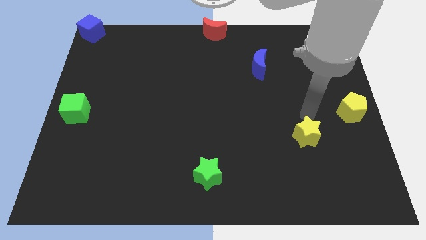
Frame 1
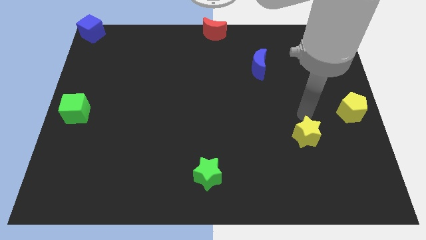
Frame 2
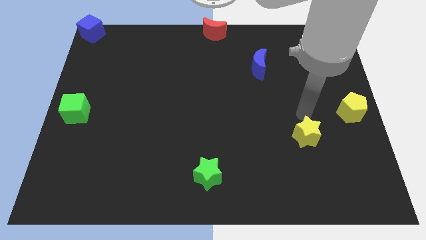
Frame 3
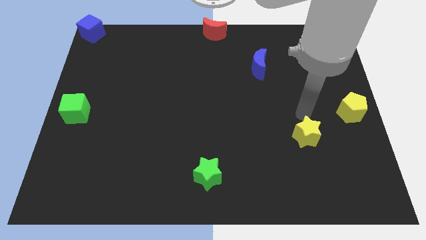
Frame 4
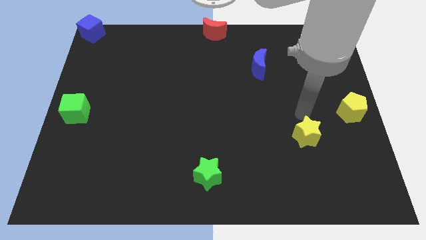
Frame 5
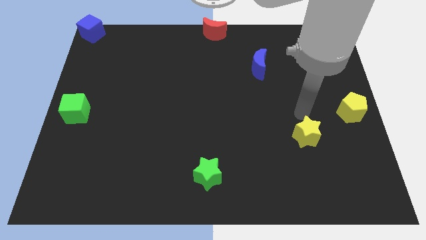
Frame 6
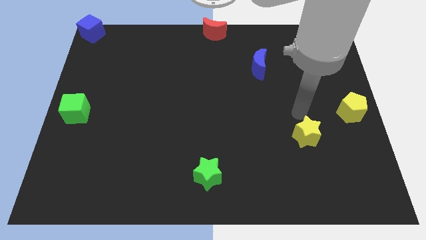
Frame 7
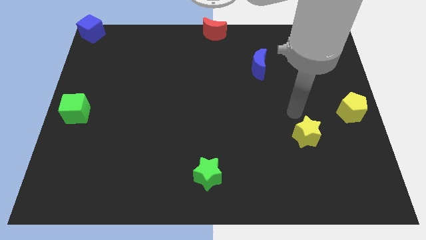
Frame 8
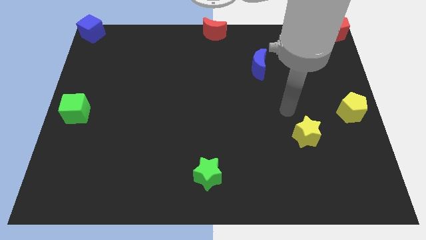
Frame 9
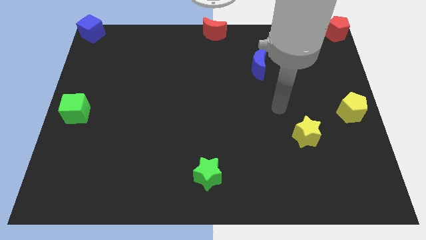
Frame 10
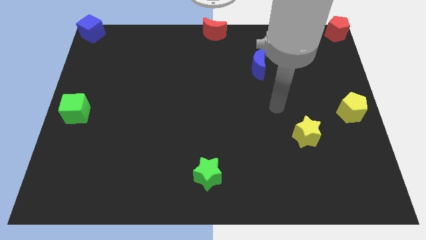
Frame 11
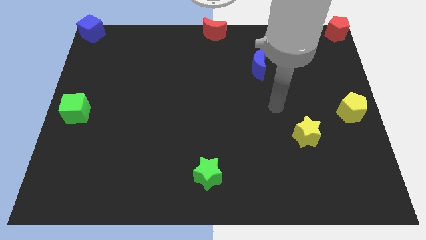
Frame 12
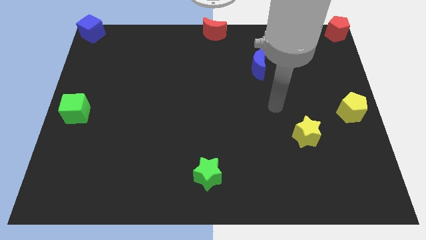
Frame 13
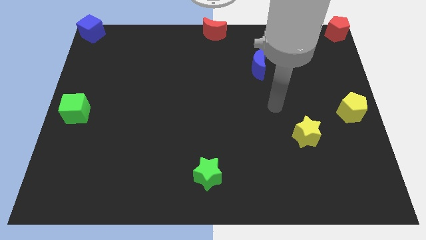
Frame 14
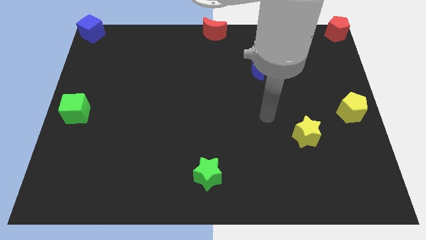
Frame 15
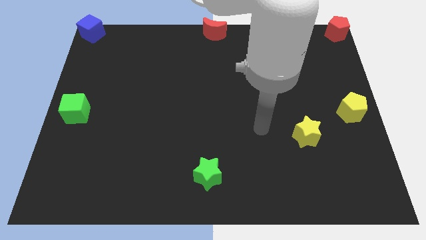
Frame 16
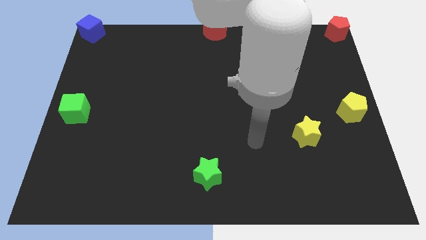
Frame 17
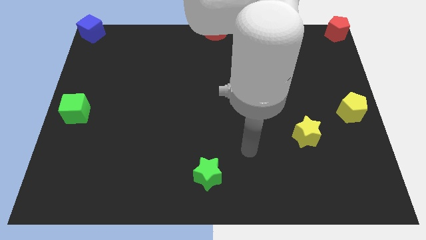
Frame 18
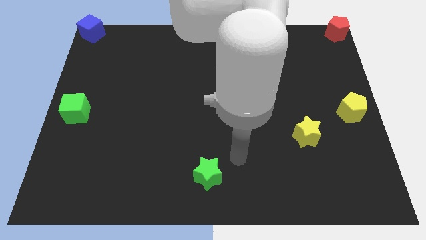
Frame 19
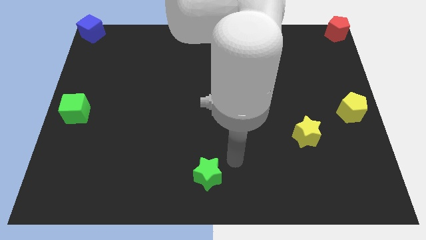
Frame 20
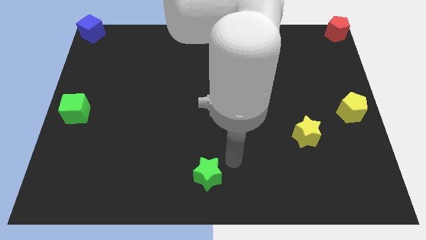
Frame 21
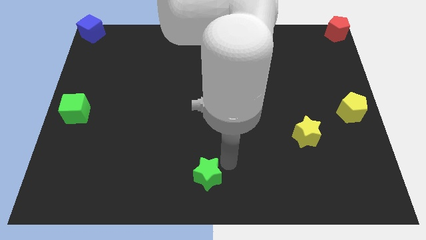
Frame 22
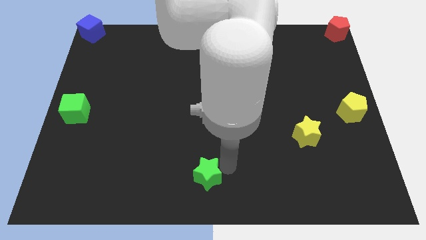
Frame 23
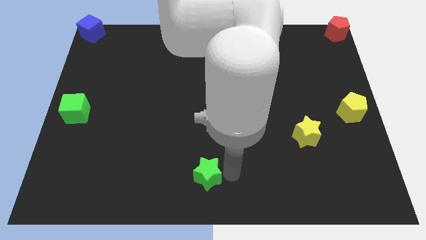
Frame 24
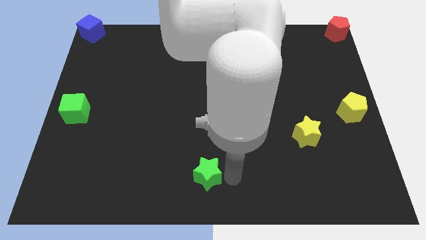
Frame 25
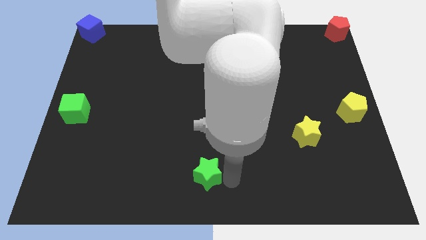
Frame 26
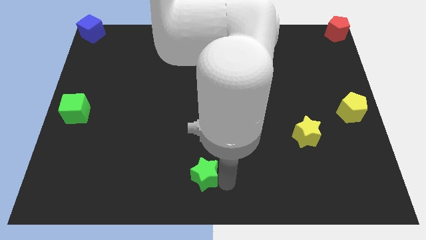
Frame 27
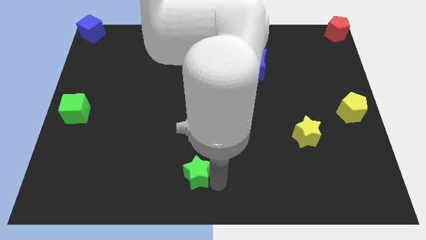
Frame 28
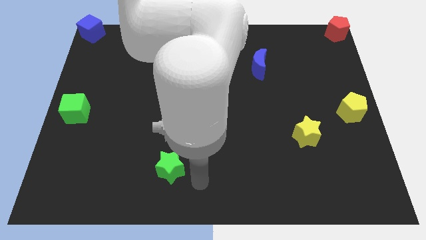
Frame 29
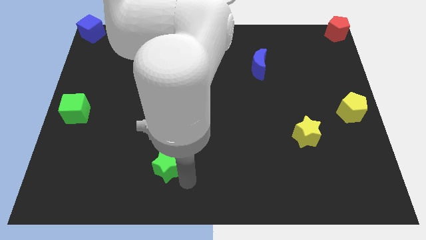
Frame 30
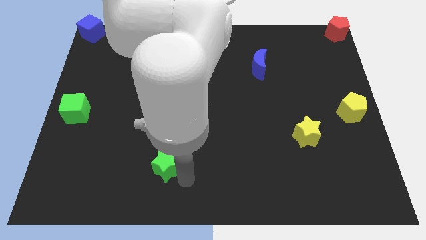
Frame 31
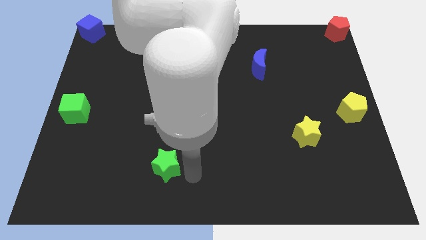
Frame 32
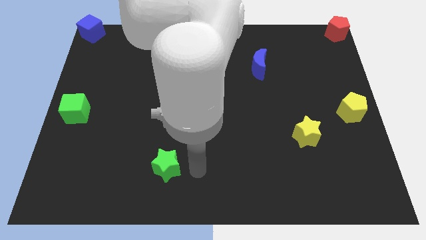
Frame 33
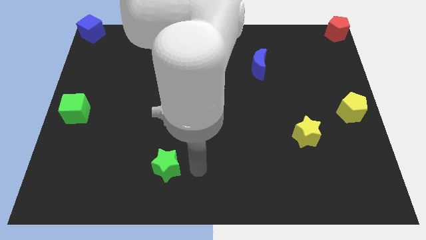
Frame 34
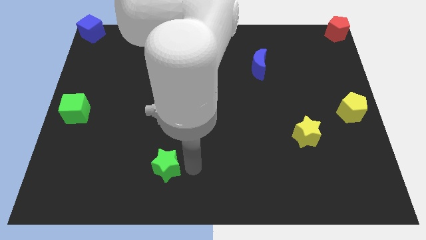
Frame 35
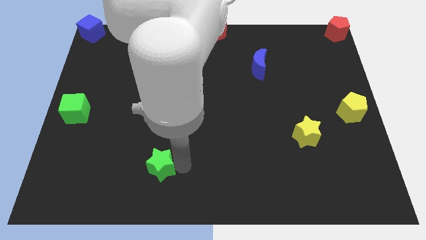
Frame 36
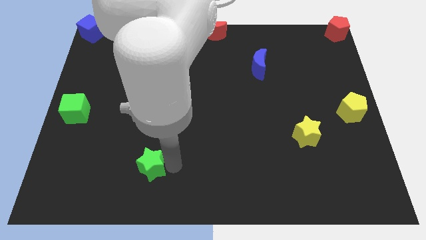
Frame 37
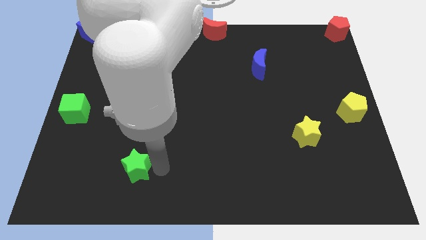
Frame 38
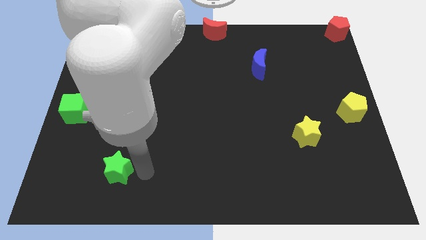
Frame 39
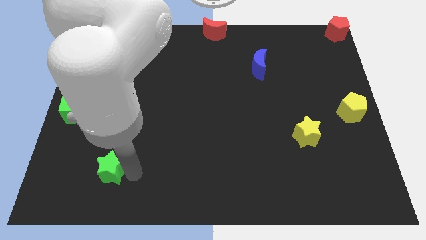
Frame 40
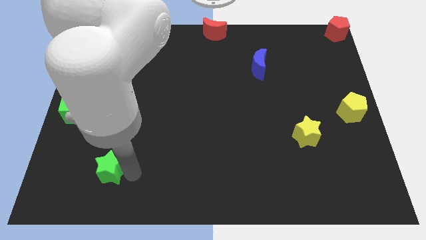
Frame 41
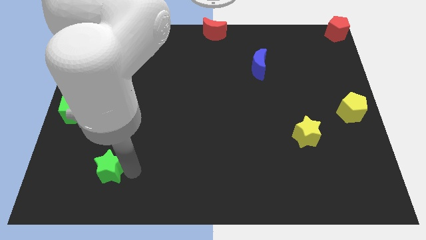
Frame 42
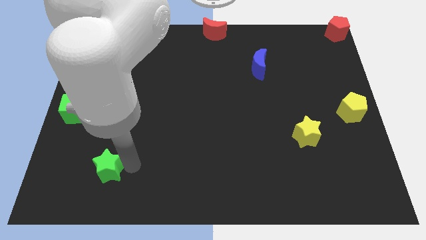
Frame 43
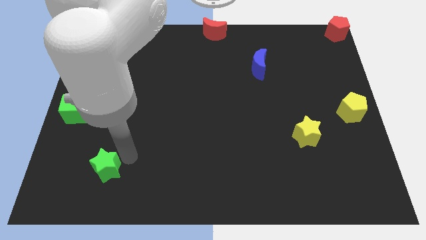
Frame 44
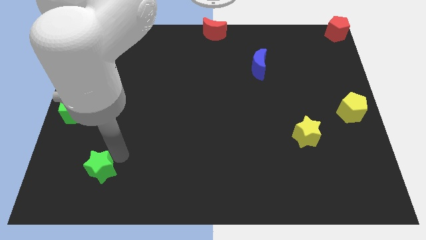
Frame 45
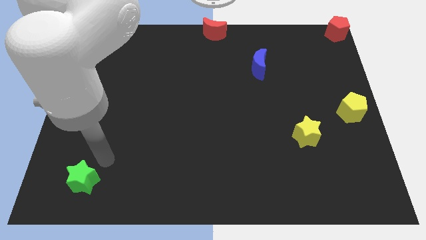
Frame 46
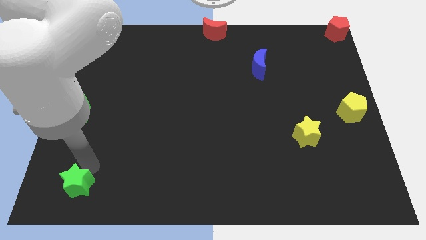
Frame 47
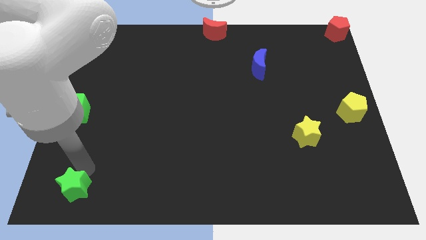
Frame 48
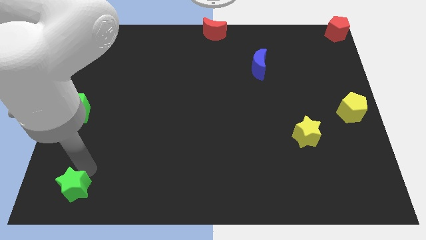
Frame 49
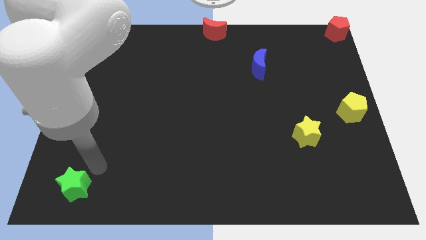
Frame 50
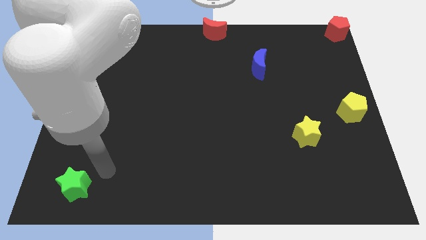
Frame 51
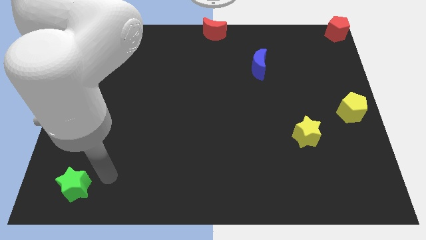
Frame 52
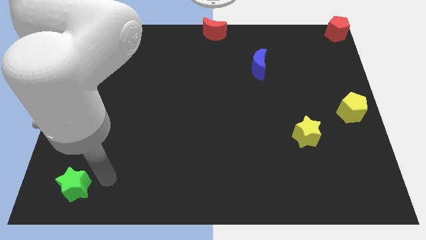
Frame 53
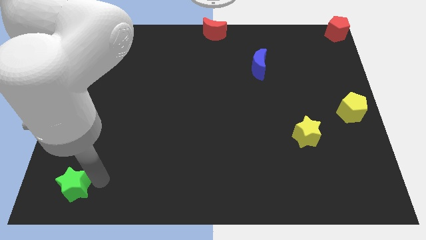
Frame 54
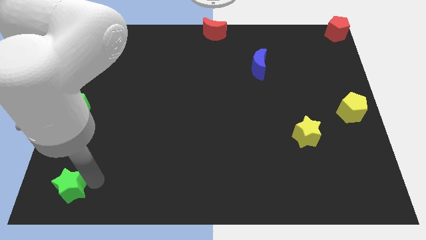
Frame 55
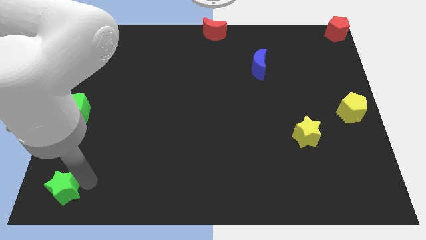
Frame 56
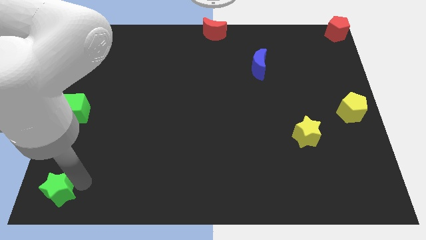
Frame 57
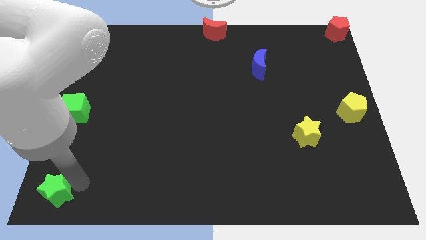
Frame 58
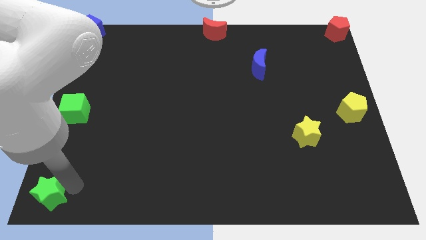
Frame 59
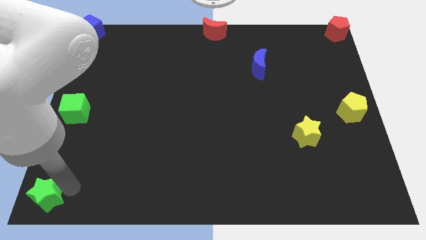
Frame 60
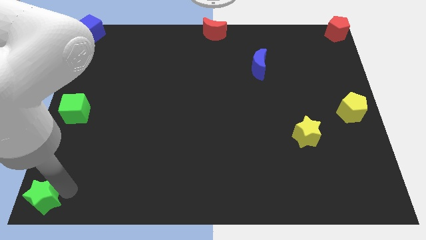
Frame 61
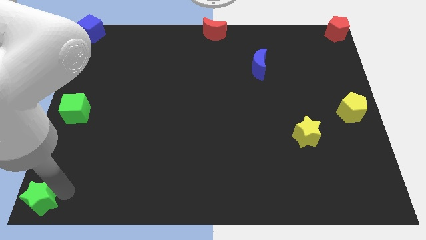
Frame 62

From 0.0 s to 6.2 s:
place the green star at the bottom left corner of the board

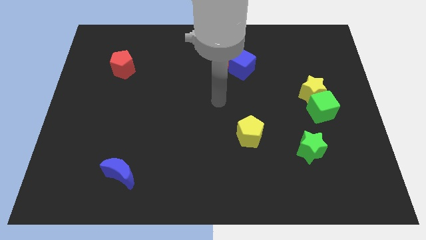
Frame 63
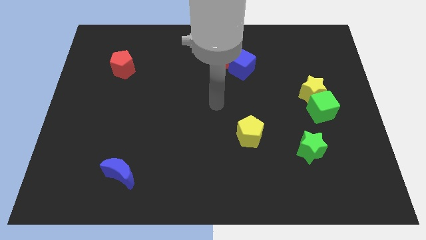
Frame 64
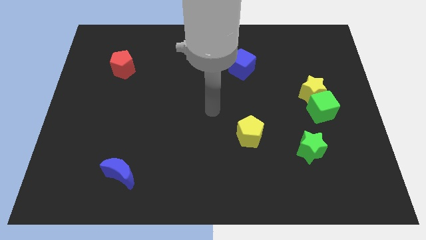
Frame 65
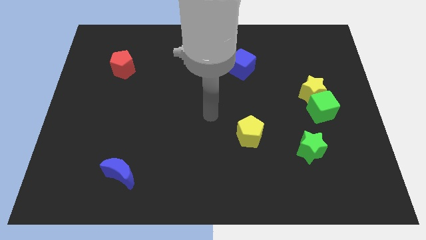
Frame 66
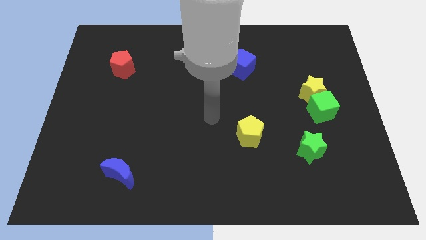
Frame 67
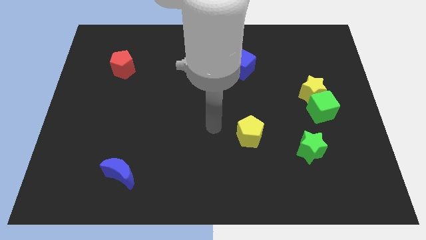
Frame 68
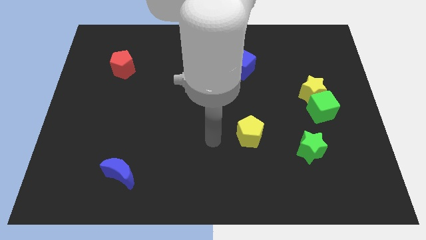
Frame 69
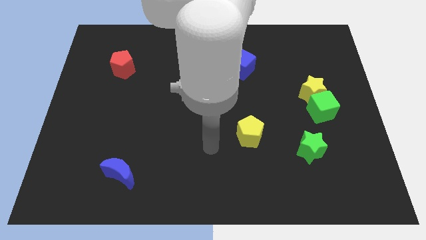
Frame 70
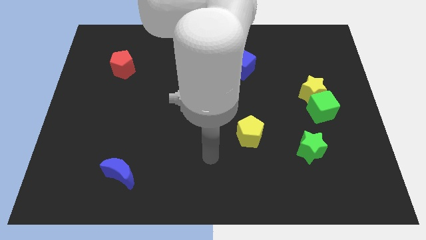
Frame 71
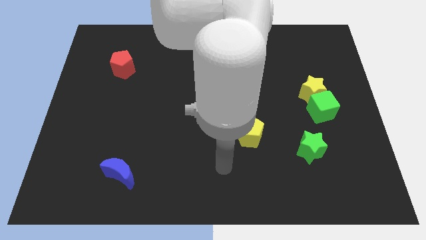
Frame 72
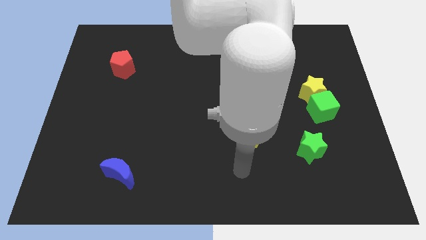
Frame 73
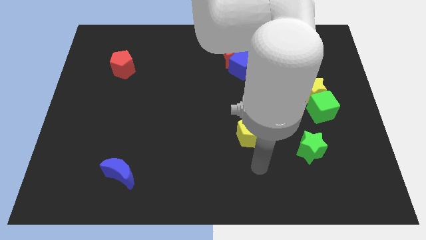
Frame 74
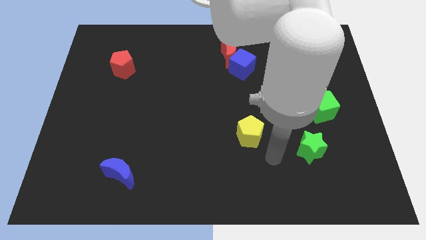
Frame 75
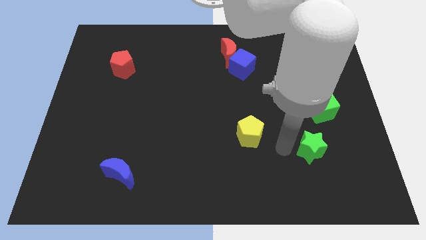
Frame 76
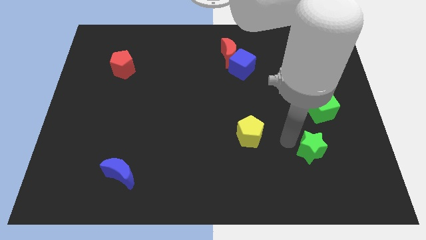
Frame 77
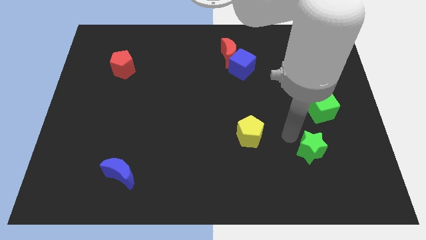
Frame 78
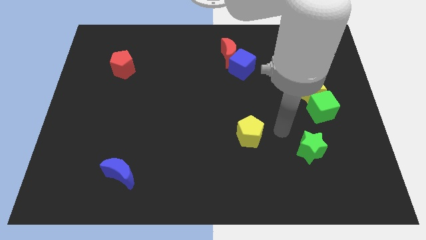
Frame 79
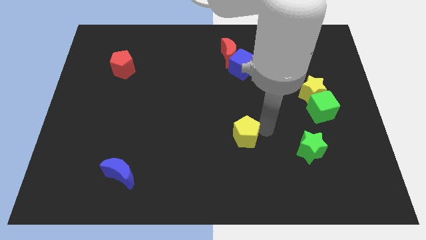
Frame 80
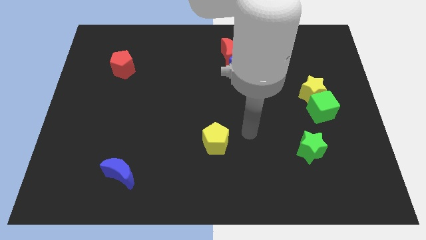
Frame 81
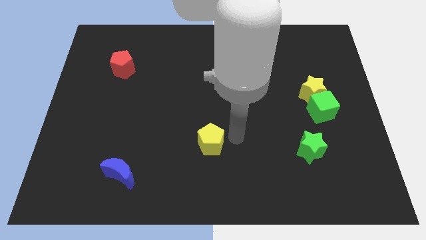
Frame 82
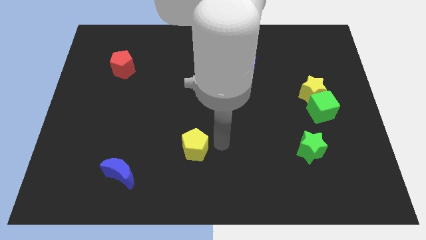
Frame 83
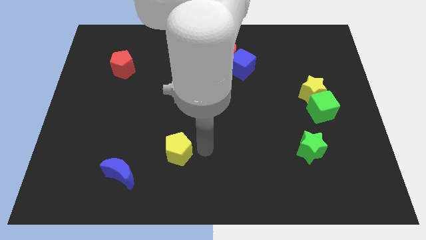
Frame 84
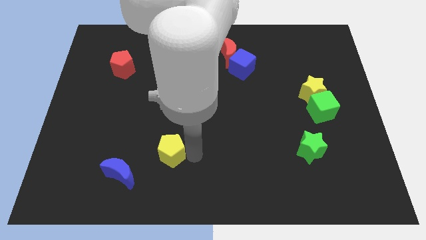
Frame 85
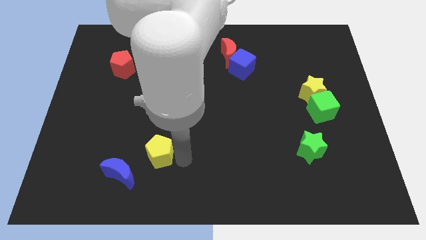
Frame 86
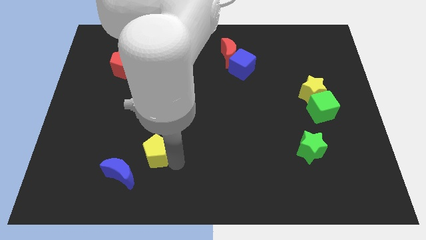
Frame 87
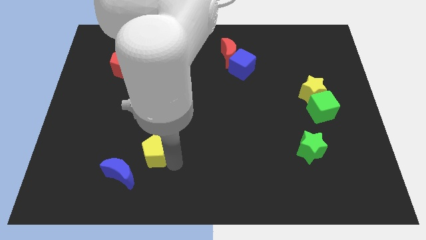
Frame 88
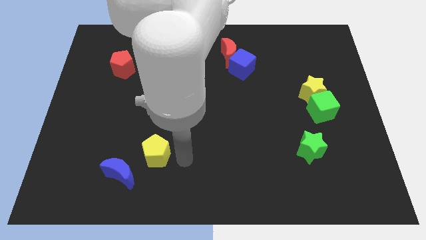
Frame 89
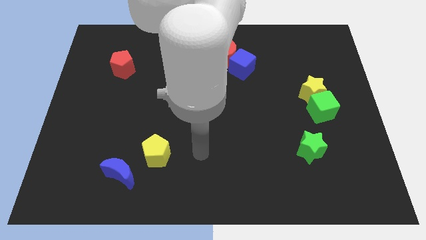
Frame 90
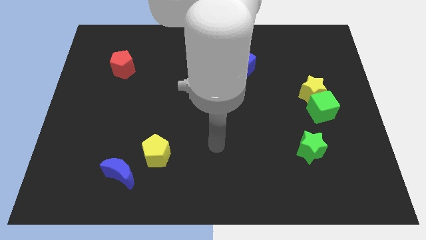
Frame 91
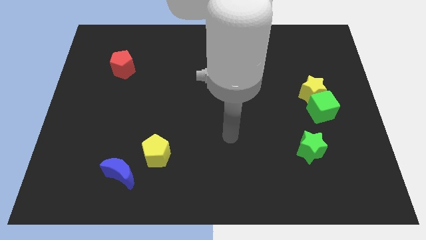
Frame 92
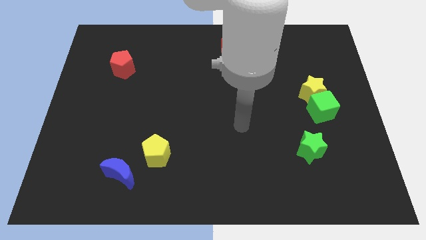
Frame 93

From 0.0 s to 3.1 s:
push the yellow pentagon to the top right of the blue crescent
